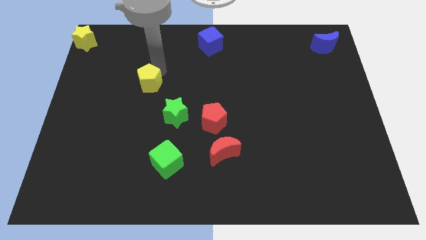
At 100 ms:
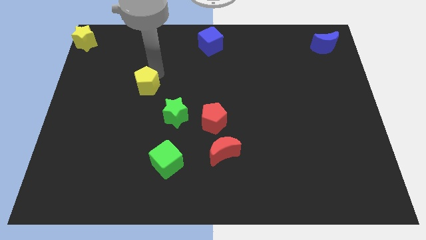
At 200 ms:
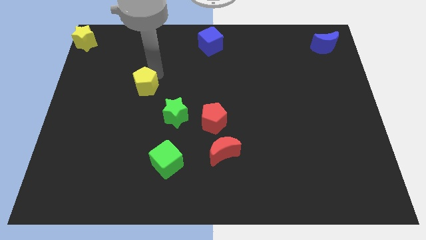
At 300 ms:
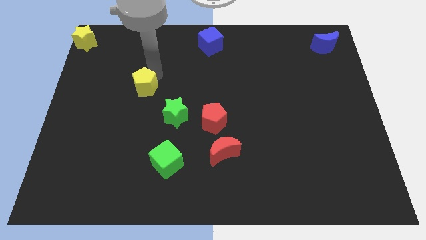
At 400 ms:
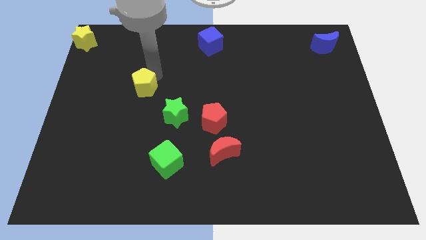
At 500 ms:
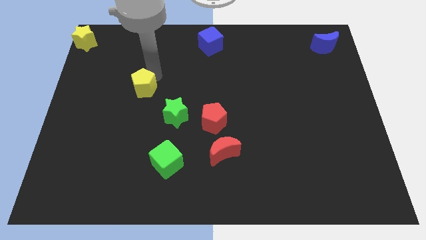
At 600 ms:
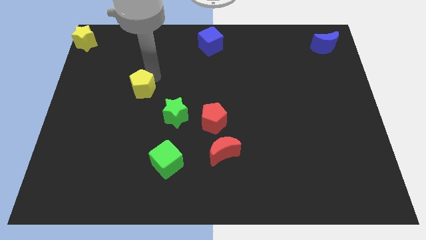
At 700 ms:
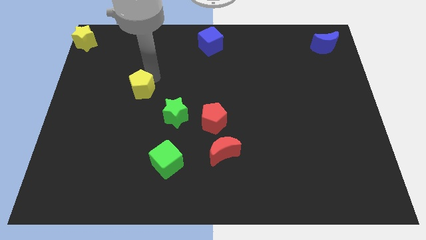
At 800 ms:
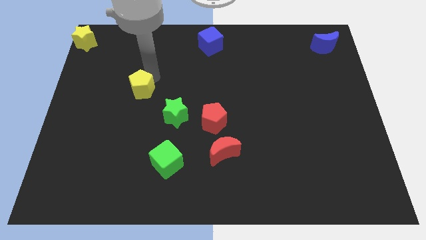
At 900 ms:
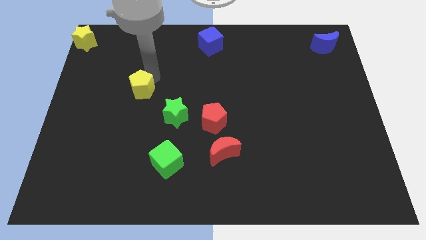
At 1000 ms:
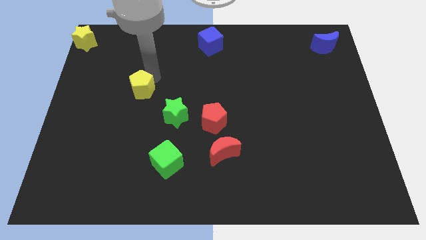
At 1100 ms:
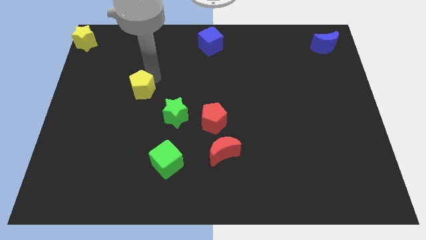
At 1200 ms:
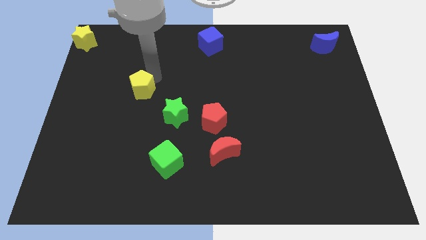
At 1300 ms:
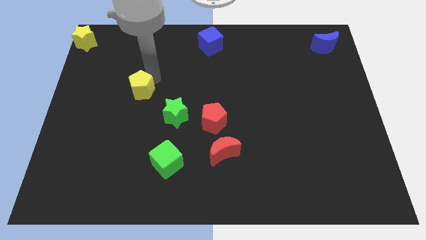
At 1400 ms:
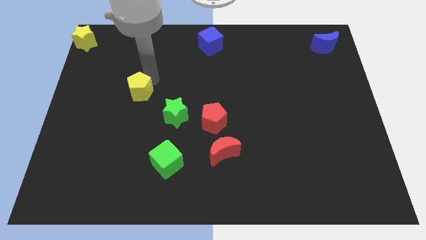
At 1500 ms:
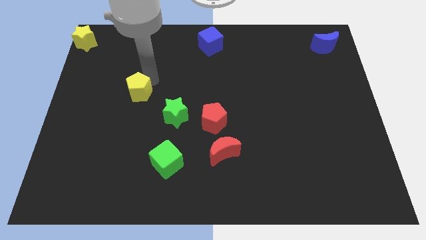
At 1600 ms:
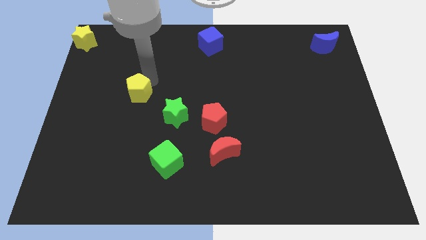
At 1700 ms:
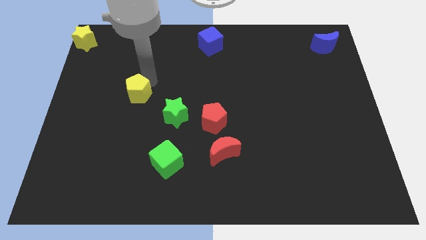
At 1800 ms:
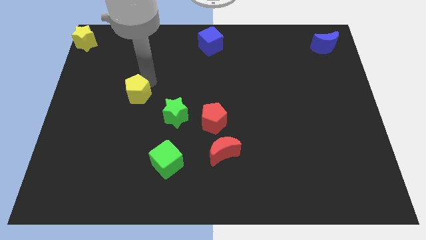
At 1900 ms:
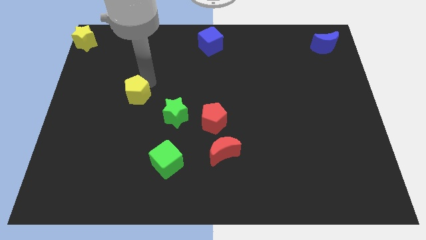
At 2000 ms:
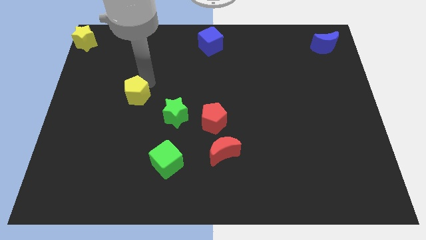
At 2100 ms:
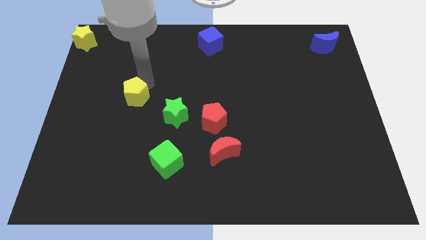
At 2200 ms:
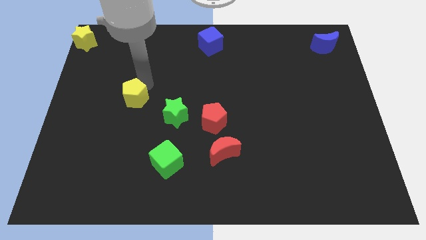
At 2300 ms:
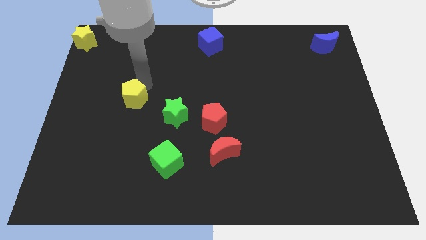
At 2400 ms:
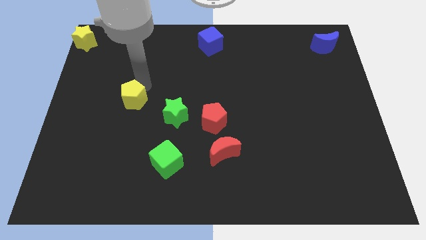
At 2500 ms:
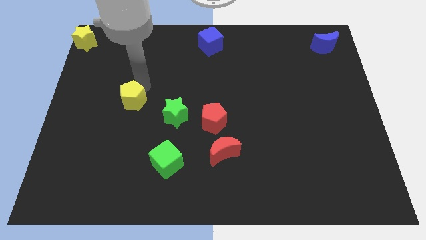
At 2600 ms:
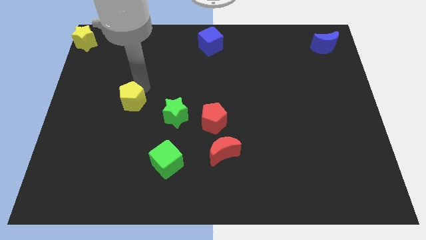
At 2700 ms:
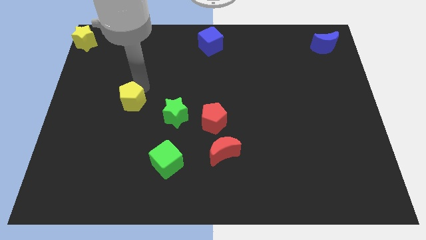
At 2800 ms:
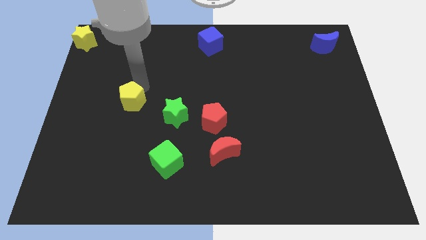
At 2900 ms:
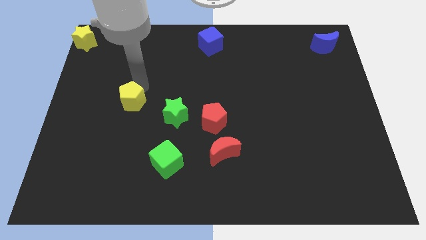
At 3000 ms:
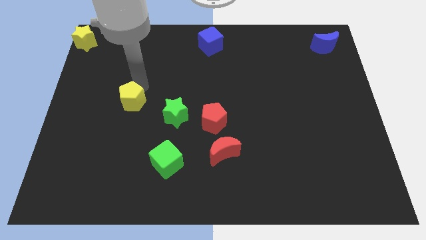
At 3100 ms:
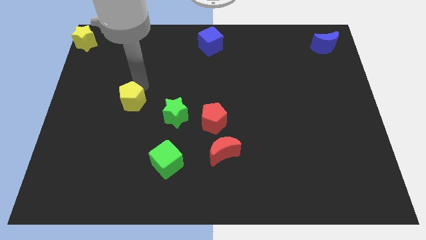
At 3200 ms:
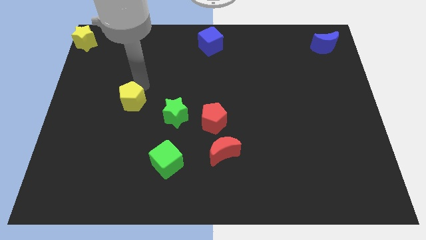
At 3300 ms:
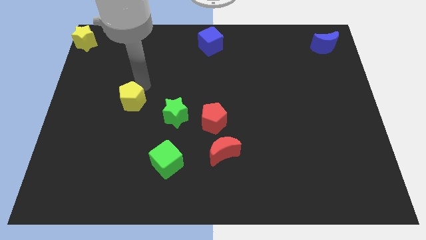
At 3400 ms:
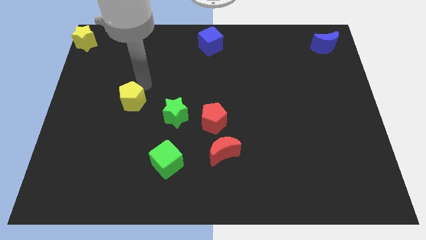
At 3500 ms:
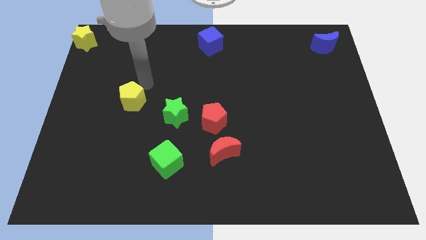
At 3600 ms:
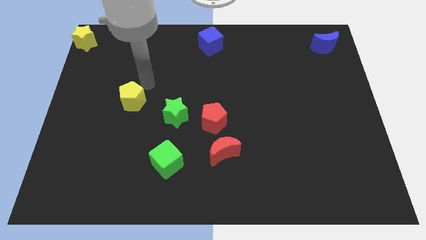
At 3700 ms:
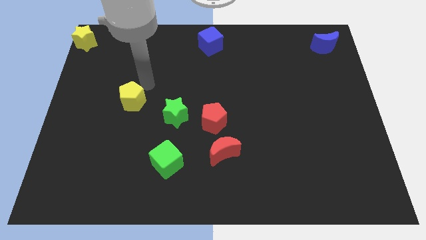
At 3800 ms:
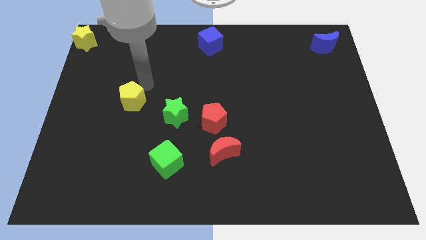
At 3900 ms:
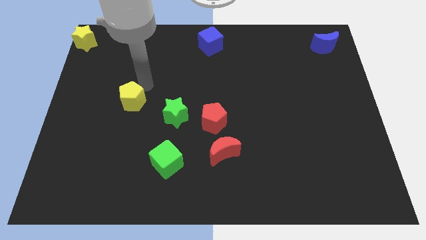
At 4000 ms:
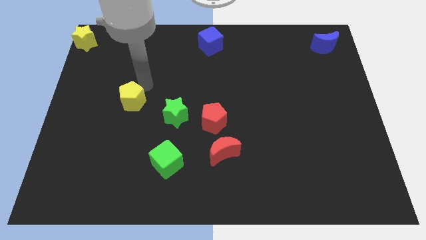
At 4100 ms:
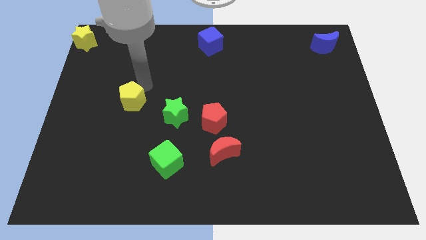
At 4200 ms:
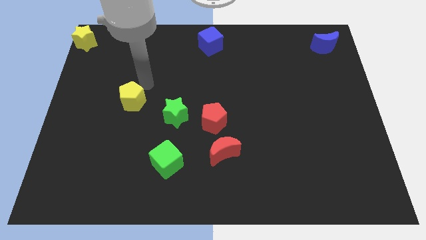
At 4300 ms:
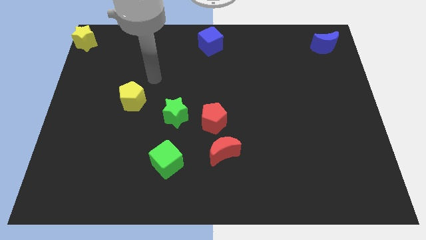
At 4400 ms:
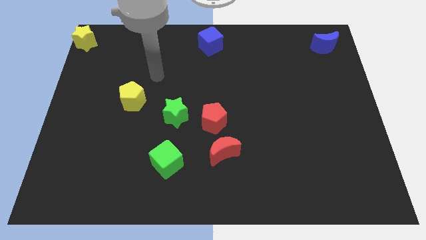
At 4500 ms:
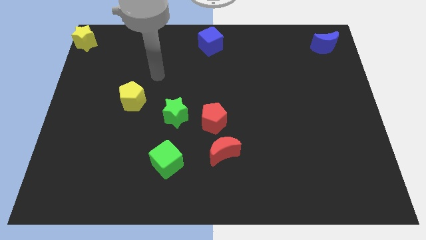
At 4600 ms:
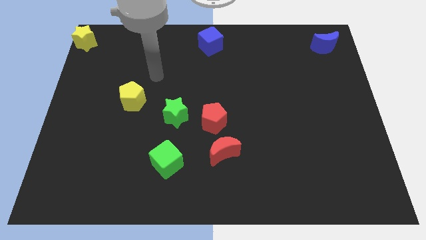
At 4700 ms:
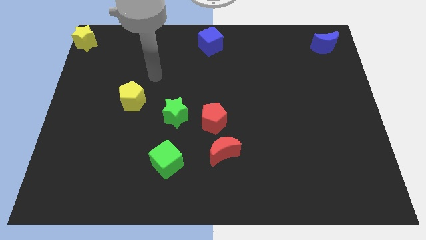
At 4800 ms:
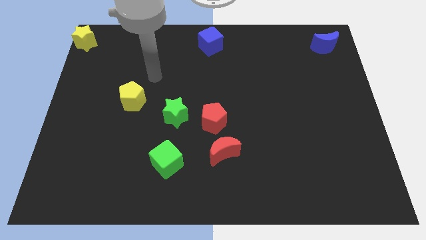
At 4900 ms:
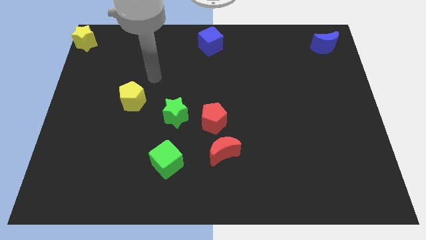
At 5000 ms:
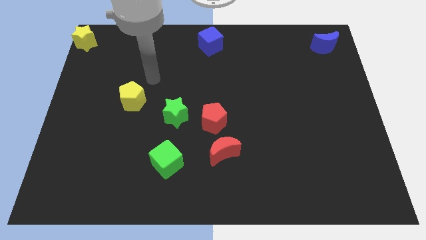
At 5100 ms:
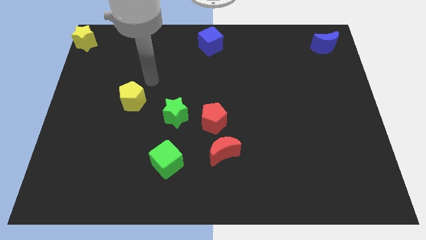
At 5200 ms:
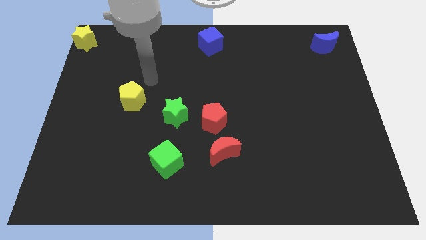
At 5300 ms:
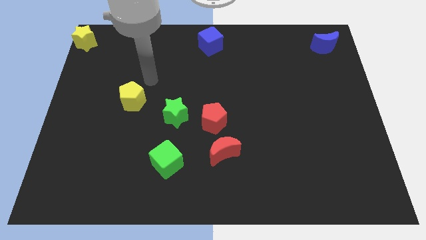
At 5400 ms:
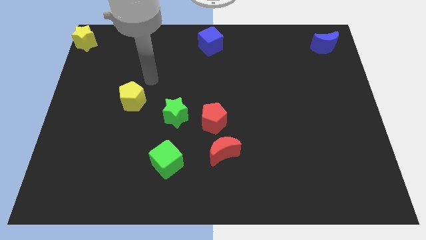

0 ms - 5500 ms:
push the yellow pentagon slightly to the bottom of the board

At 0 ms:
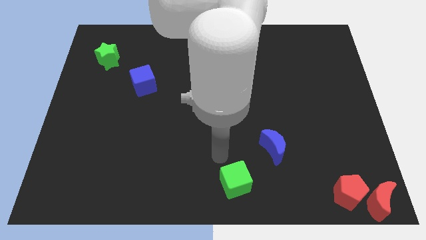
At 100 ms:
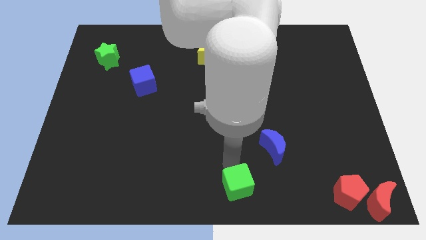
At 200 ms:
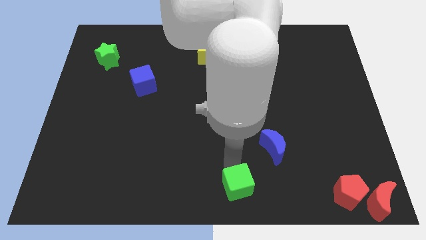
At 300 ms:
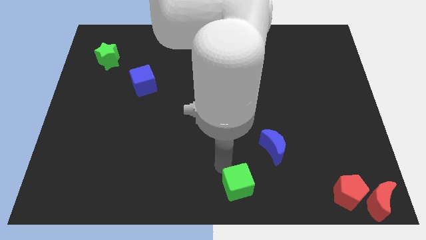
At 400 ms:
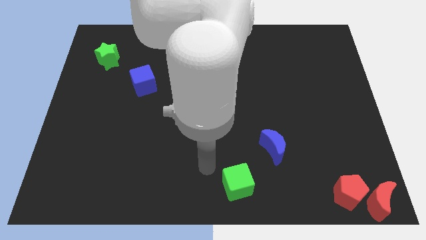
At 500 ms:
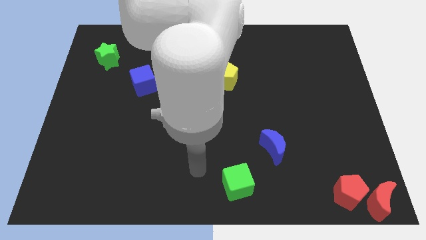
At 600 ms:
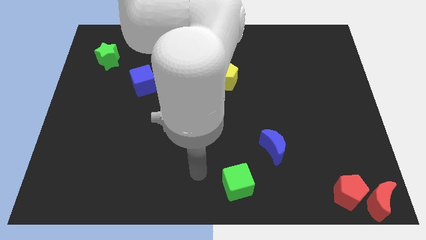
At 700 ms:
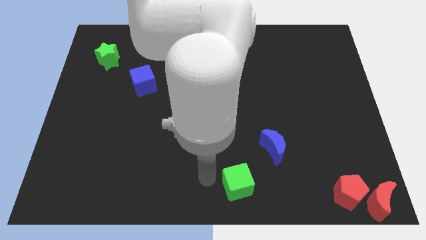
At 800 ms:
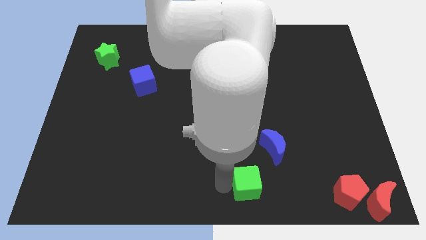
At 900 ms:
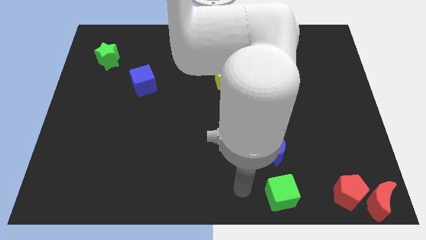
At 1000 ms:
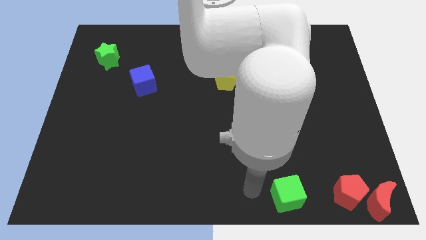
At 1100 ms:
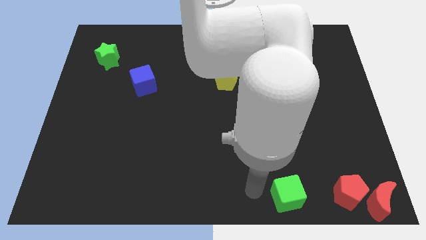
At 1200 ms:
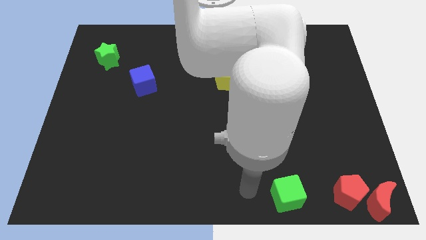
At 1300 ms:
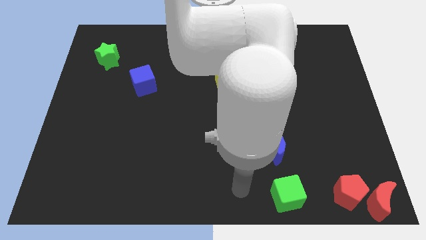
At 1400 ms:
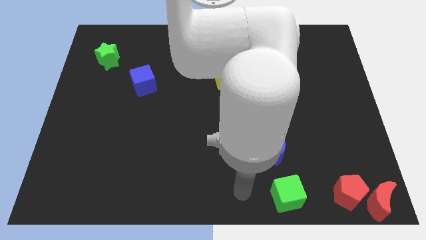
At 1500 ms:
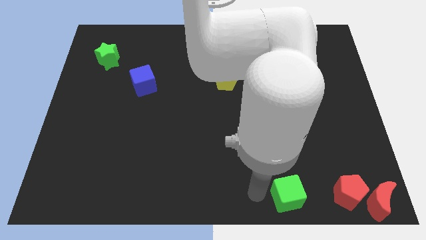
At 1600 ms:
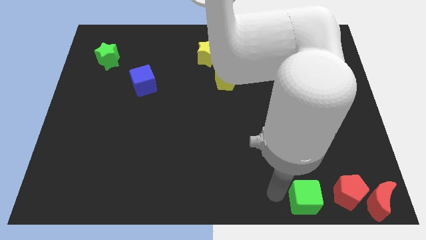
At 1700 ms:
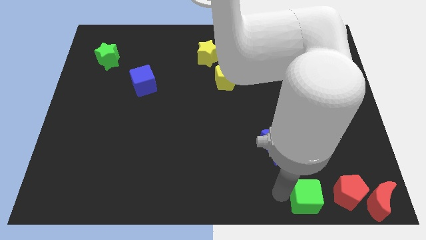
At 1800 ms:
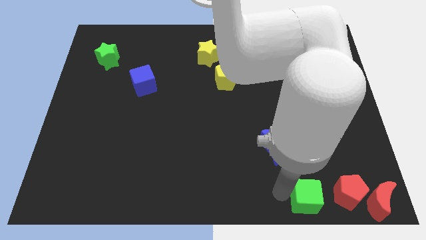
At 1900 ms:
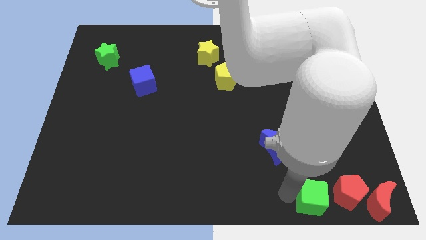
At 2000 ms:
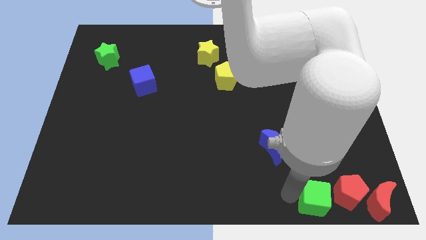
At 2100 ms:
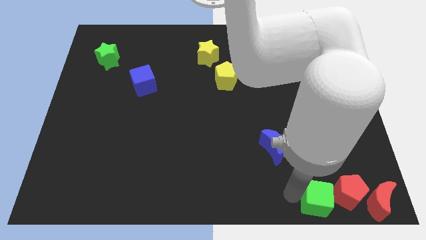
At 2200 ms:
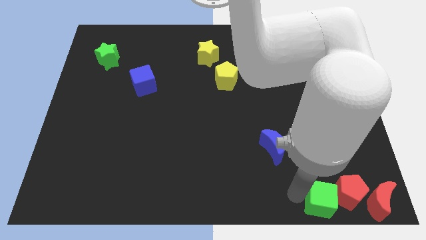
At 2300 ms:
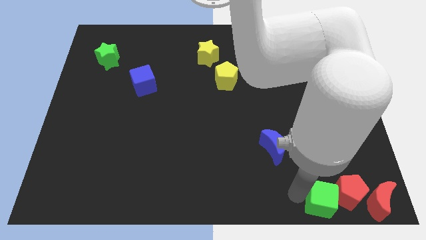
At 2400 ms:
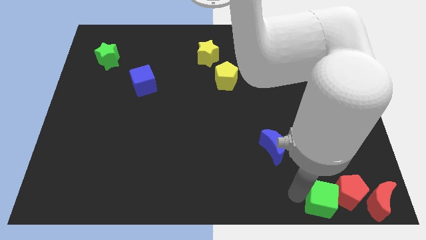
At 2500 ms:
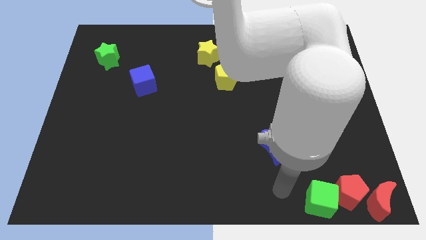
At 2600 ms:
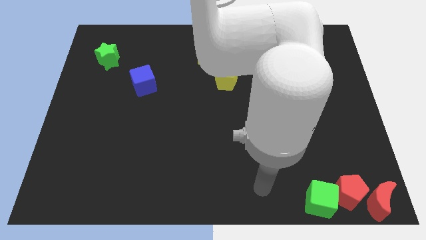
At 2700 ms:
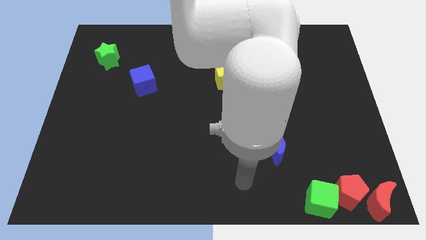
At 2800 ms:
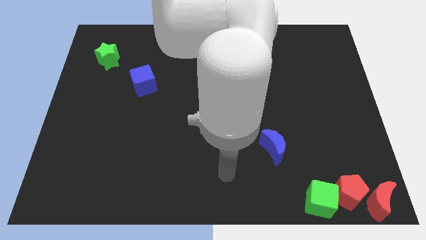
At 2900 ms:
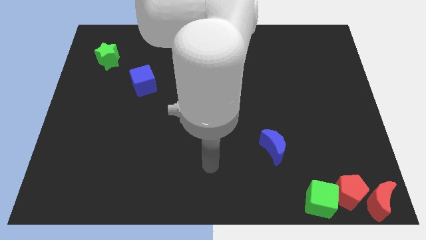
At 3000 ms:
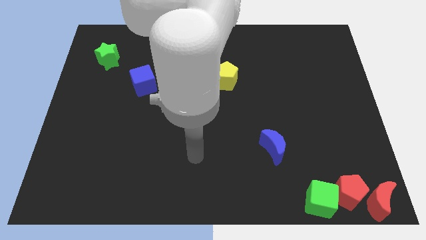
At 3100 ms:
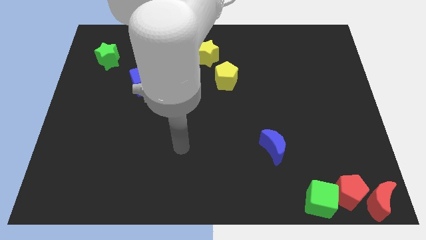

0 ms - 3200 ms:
move the green cube close left to red pentagon

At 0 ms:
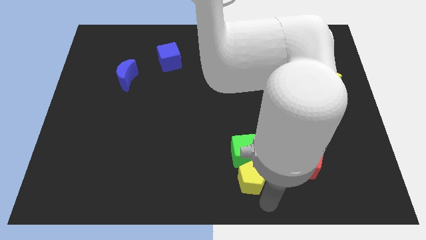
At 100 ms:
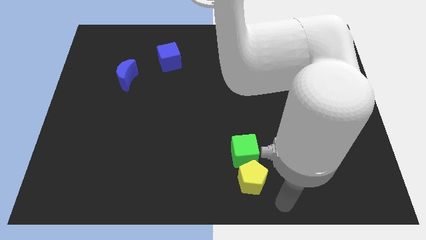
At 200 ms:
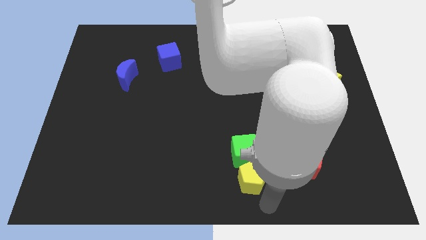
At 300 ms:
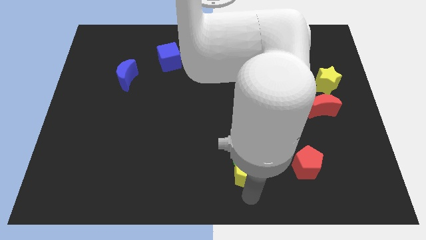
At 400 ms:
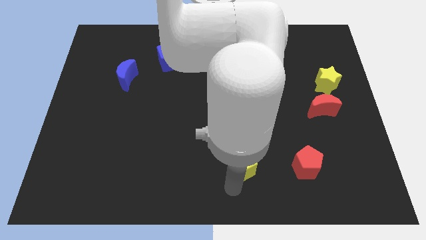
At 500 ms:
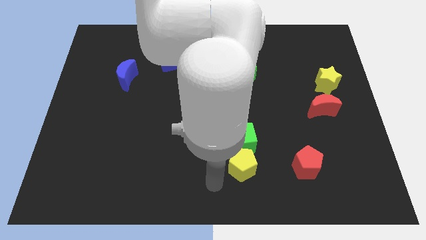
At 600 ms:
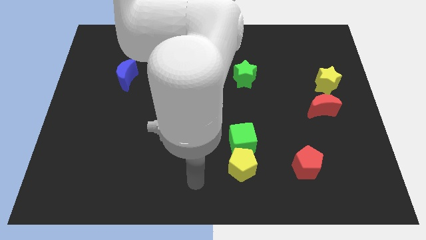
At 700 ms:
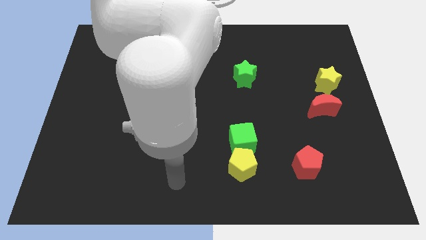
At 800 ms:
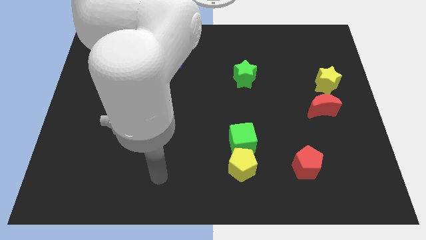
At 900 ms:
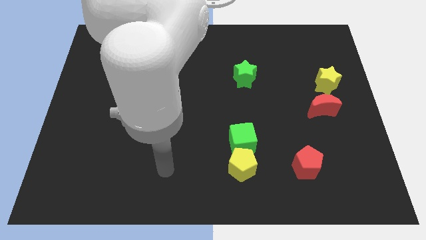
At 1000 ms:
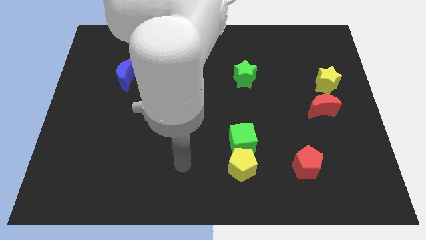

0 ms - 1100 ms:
push yellow pentagon and green cube slightly upwards
